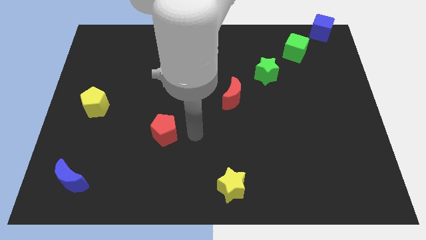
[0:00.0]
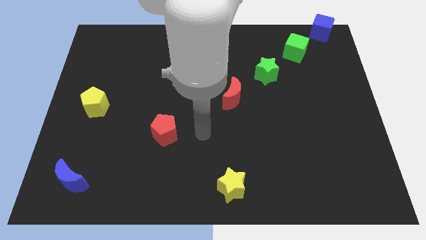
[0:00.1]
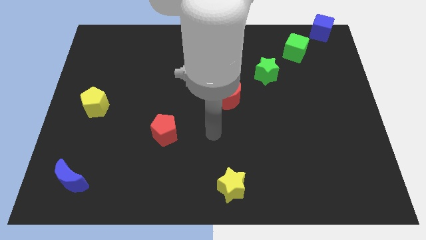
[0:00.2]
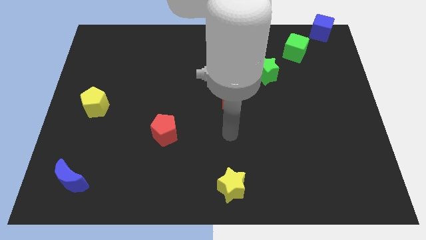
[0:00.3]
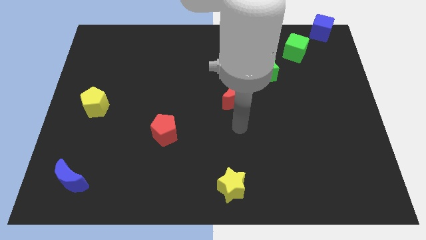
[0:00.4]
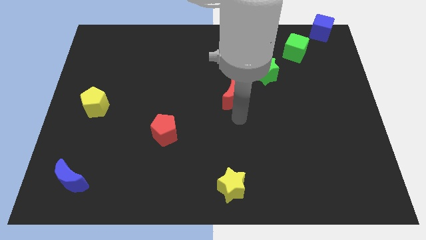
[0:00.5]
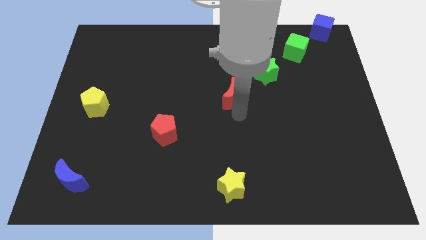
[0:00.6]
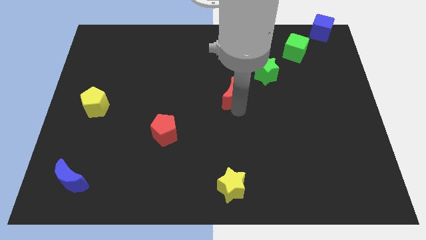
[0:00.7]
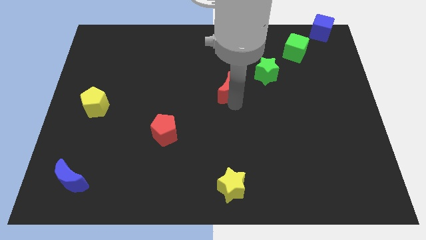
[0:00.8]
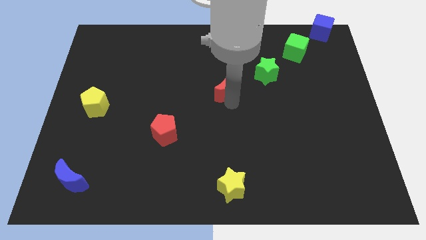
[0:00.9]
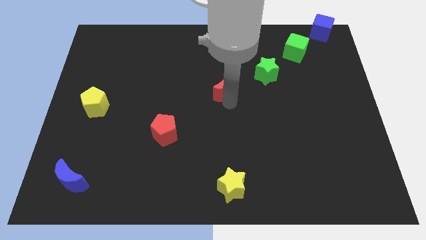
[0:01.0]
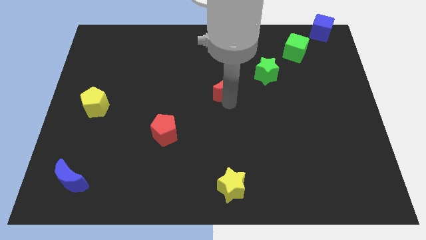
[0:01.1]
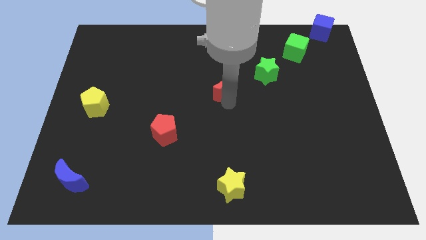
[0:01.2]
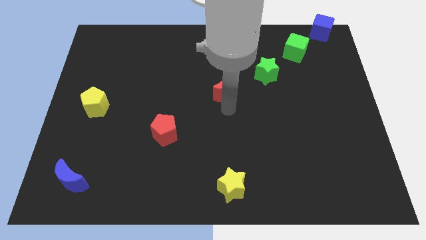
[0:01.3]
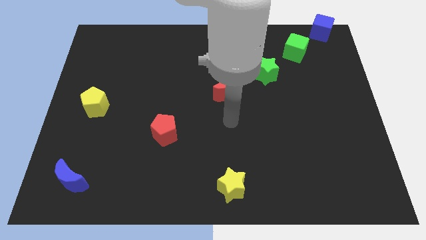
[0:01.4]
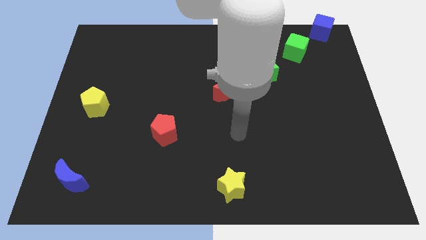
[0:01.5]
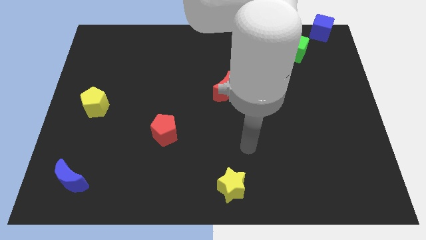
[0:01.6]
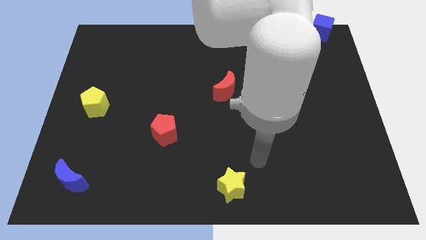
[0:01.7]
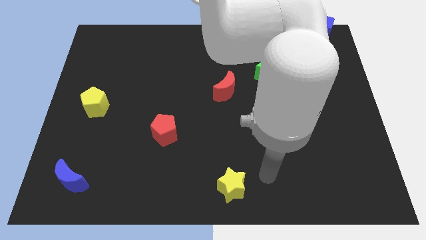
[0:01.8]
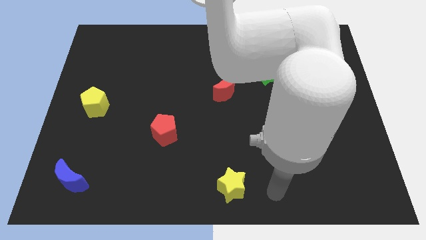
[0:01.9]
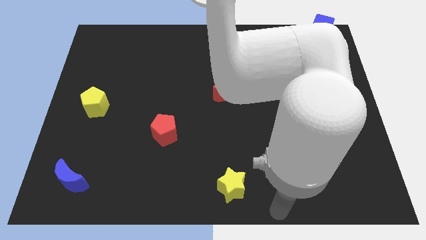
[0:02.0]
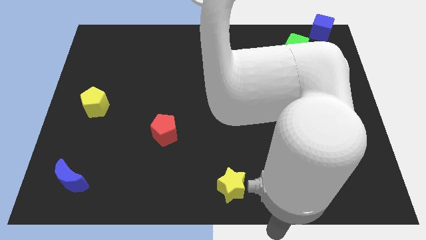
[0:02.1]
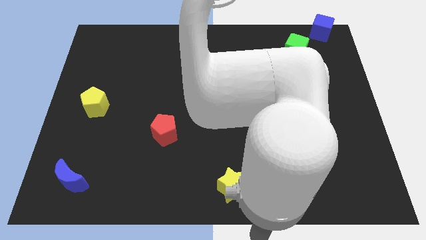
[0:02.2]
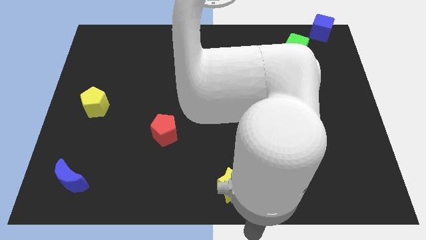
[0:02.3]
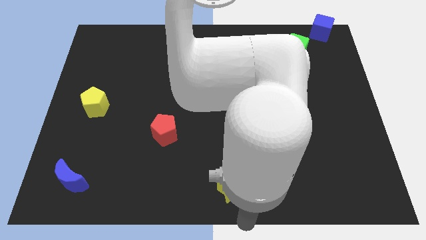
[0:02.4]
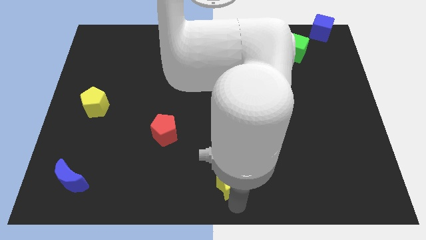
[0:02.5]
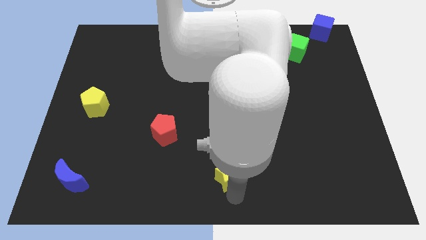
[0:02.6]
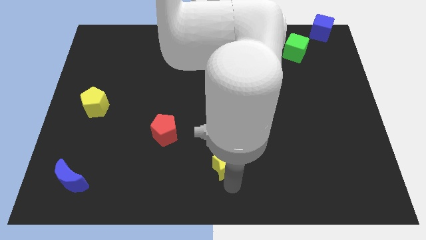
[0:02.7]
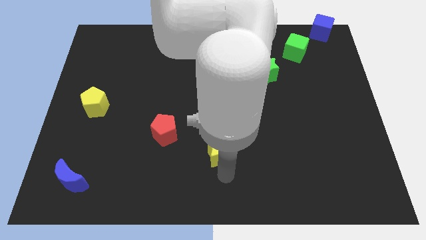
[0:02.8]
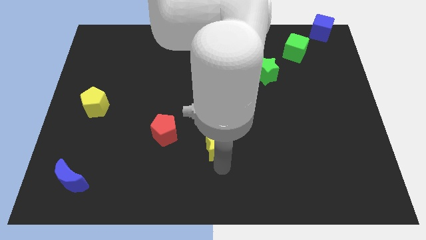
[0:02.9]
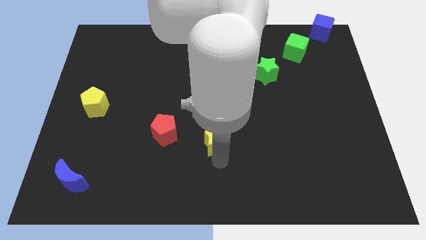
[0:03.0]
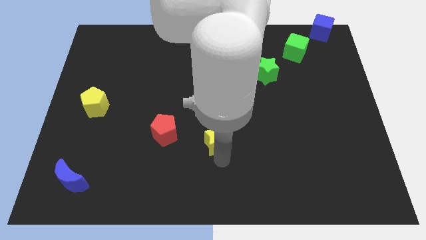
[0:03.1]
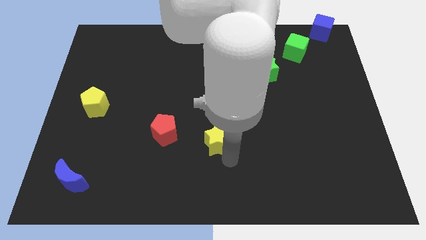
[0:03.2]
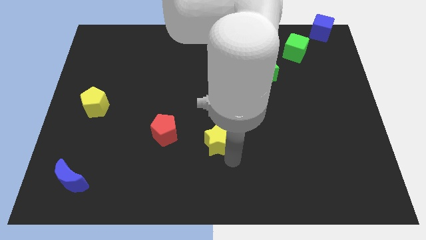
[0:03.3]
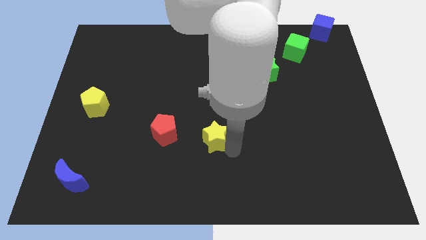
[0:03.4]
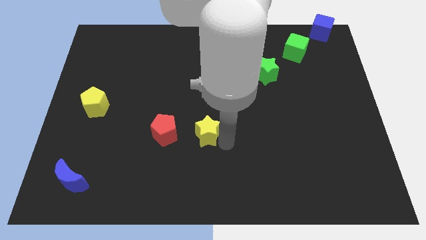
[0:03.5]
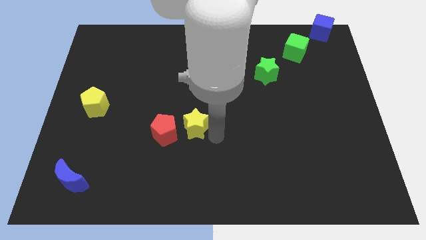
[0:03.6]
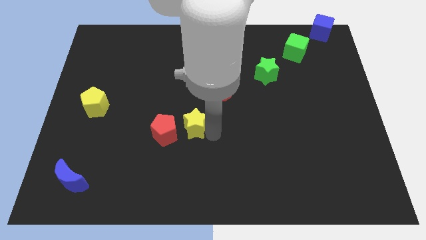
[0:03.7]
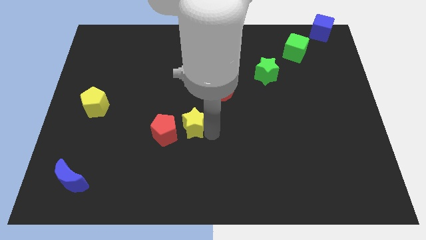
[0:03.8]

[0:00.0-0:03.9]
place the yellow star at right side of the red pentagon

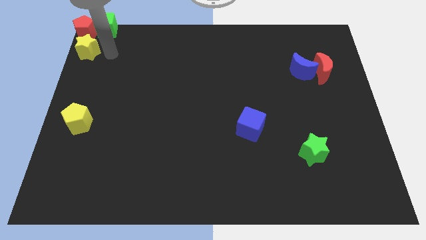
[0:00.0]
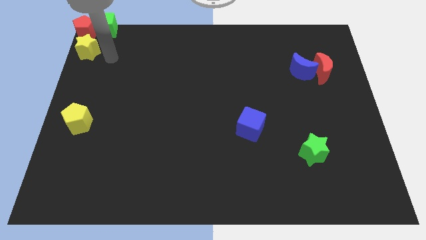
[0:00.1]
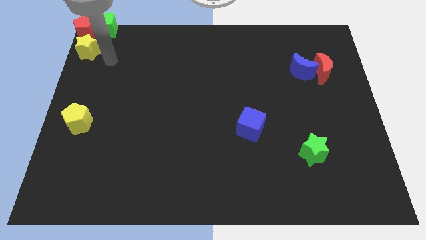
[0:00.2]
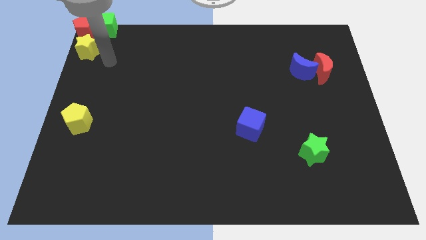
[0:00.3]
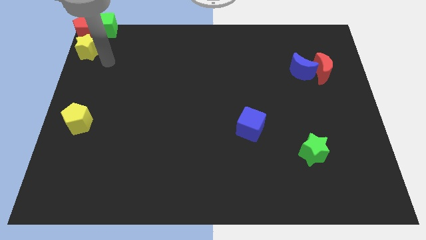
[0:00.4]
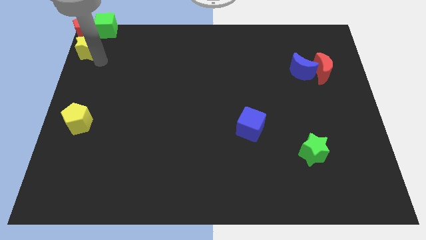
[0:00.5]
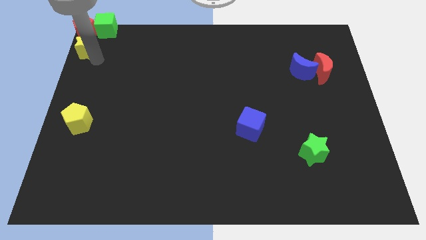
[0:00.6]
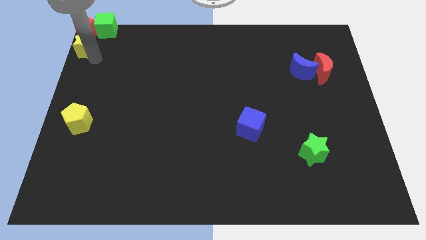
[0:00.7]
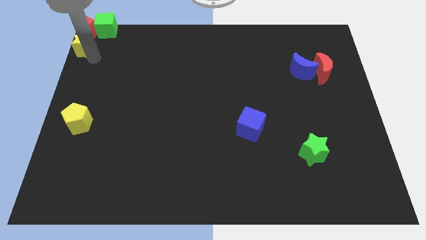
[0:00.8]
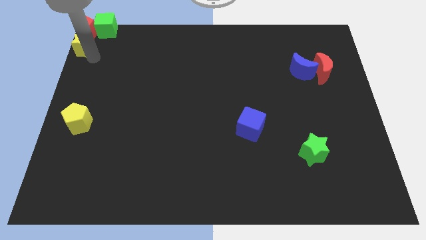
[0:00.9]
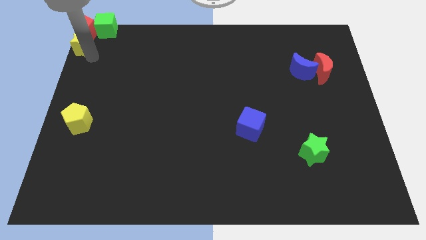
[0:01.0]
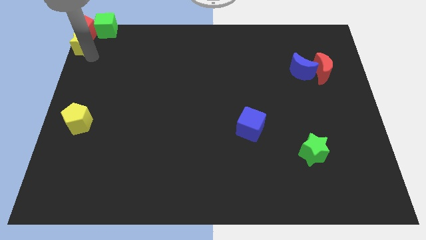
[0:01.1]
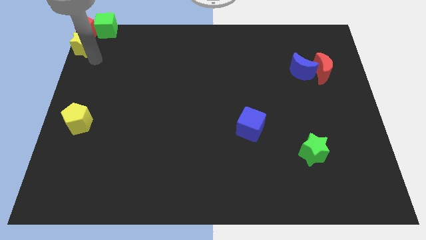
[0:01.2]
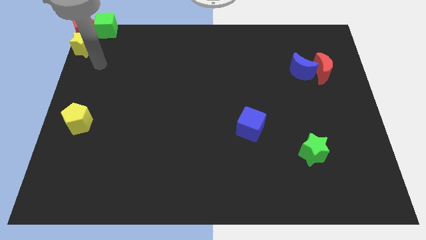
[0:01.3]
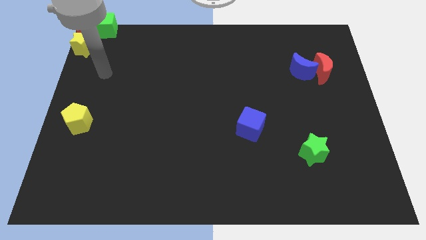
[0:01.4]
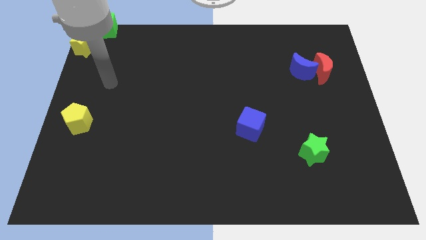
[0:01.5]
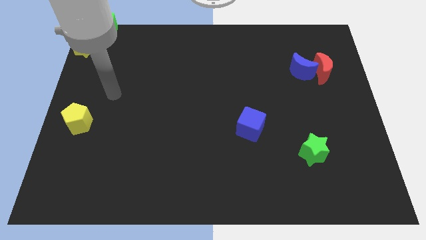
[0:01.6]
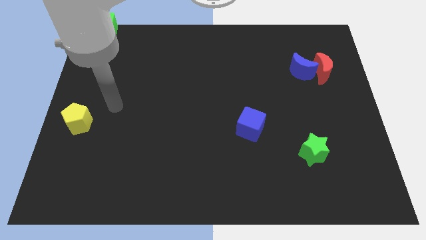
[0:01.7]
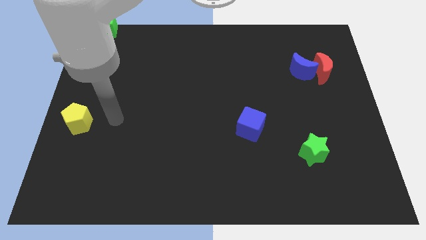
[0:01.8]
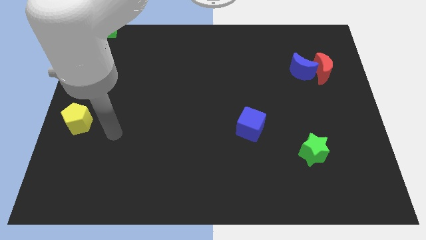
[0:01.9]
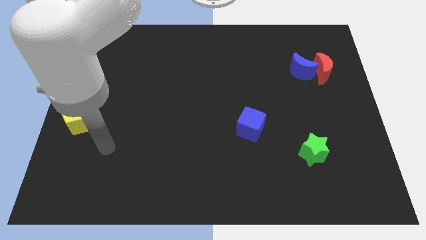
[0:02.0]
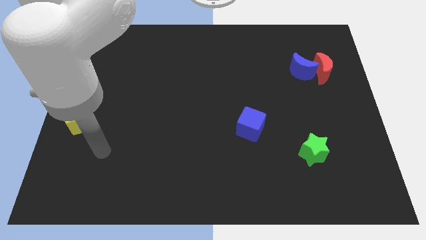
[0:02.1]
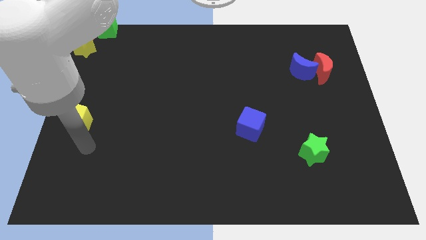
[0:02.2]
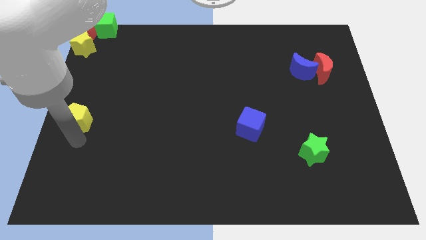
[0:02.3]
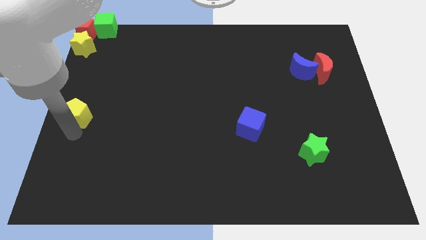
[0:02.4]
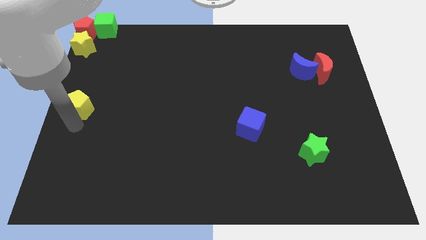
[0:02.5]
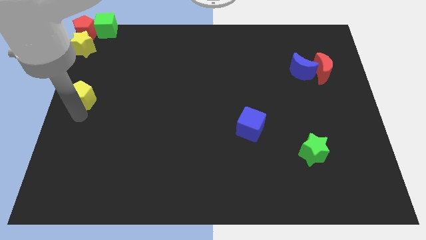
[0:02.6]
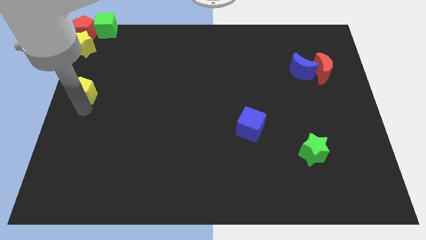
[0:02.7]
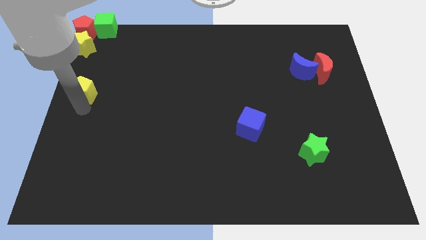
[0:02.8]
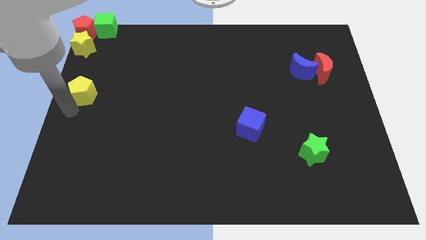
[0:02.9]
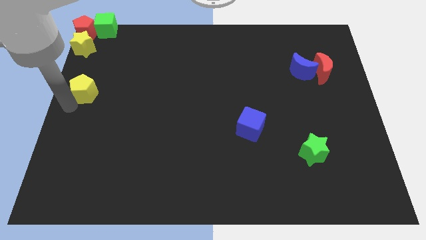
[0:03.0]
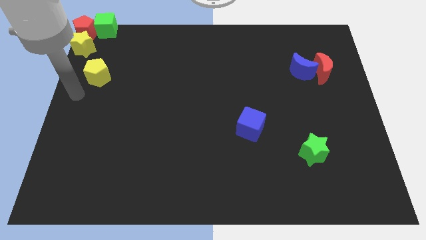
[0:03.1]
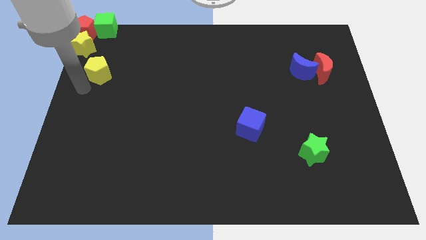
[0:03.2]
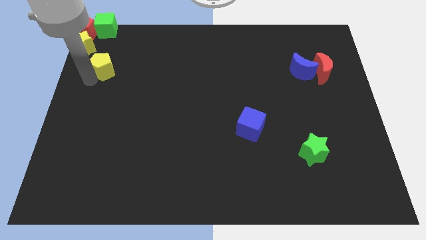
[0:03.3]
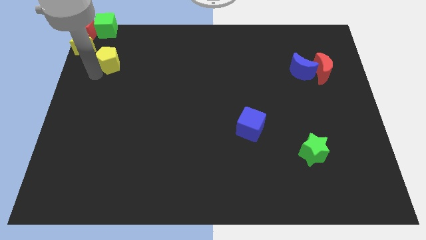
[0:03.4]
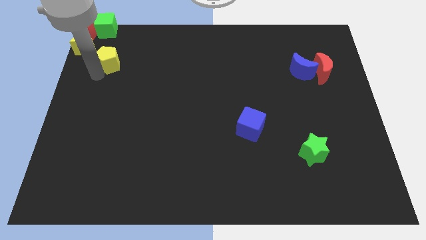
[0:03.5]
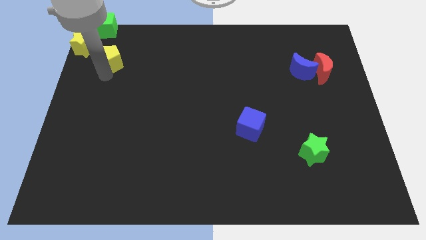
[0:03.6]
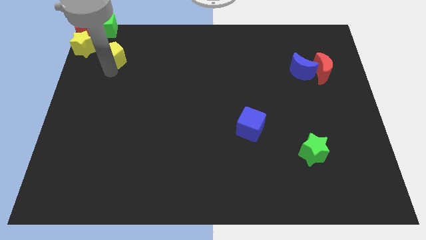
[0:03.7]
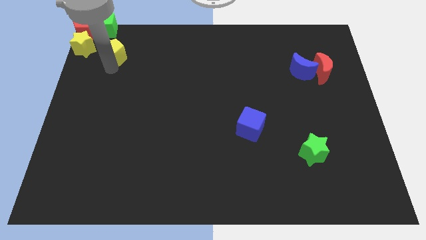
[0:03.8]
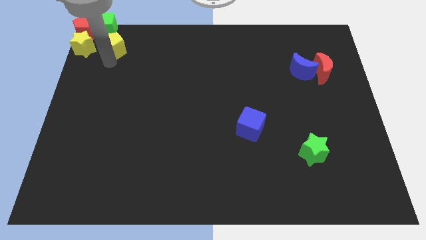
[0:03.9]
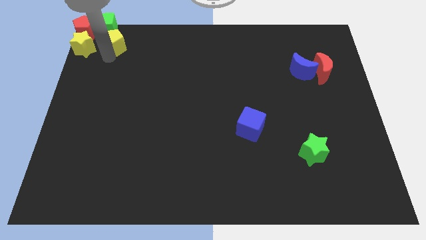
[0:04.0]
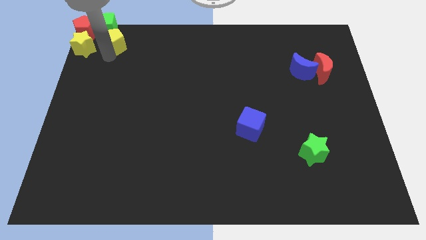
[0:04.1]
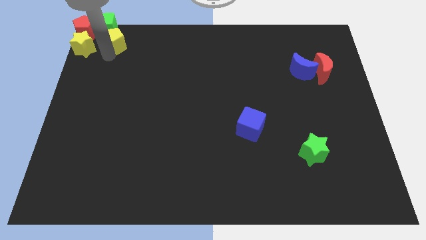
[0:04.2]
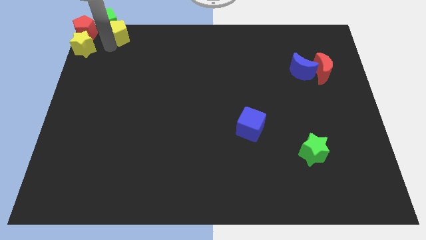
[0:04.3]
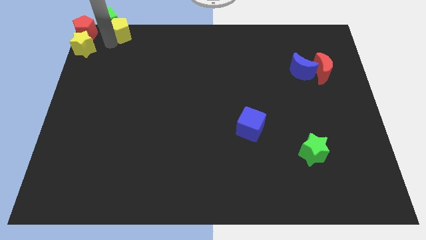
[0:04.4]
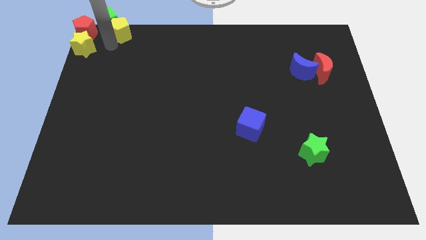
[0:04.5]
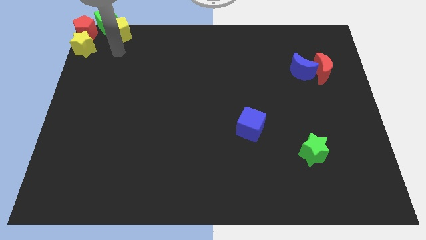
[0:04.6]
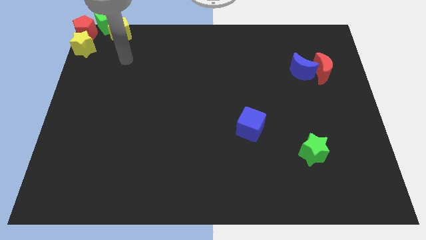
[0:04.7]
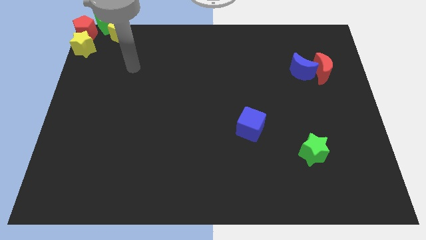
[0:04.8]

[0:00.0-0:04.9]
move yellow pentagon into group of block

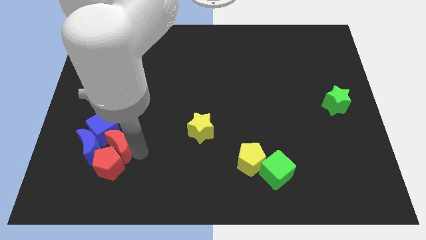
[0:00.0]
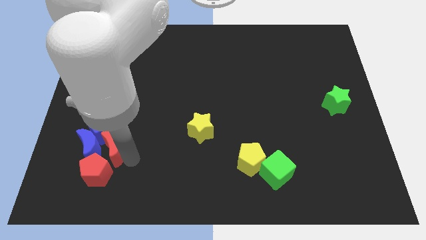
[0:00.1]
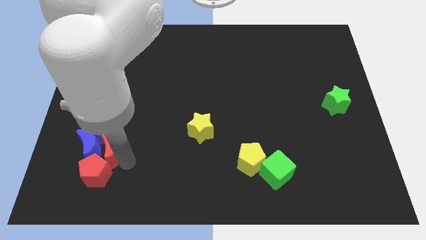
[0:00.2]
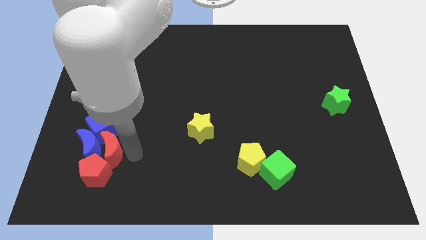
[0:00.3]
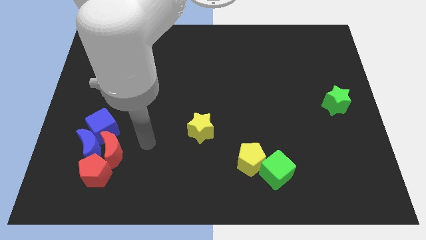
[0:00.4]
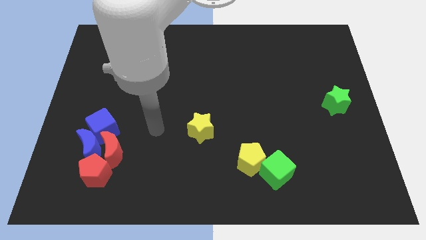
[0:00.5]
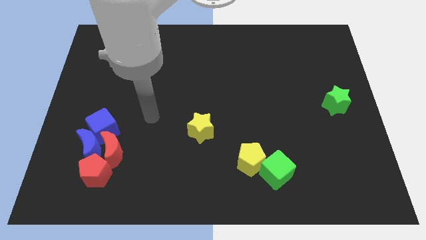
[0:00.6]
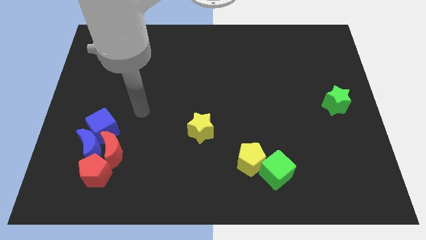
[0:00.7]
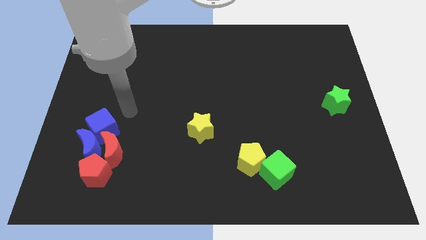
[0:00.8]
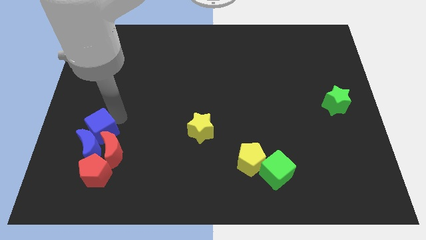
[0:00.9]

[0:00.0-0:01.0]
place the arm above the blue cube
